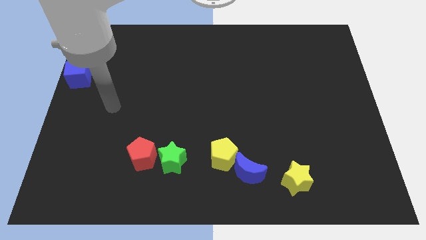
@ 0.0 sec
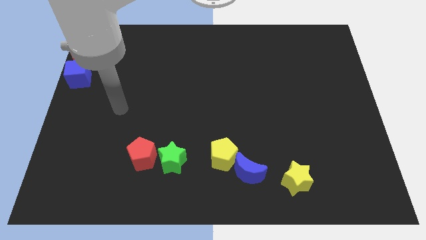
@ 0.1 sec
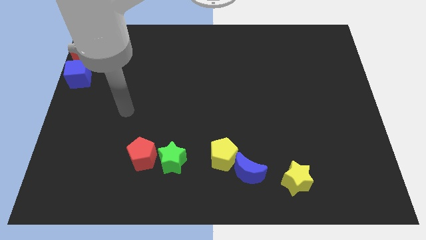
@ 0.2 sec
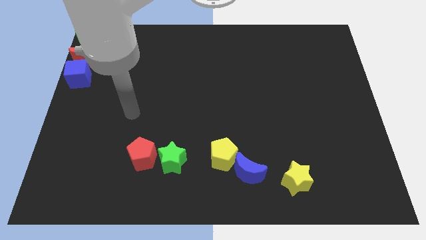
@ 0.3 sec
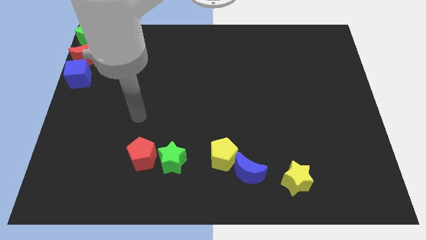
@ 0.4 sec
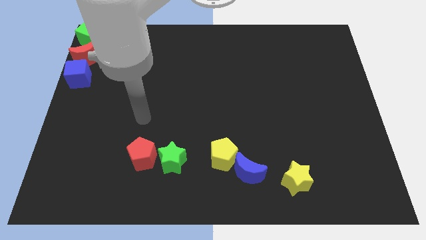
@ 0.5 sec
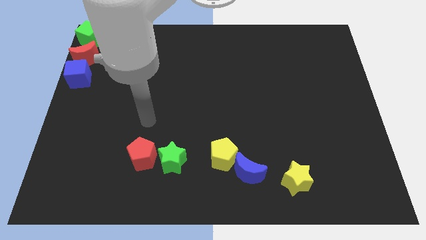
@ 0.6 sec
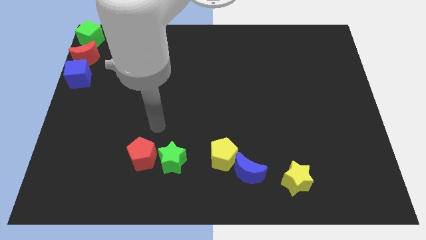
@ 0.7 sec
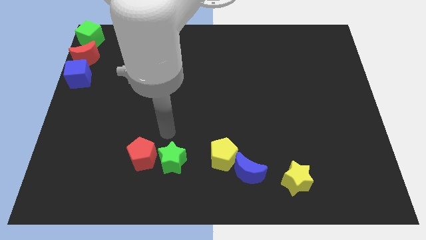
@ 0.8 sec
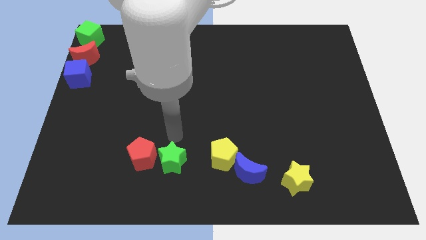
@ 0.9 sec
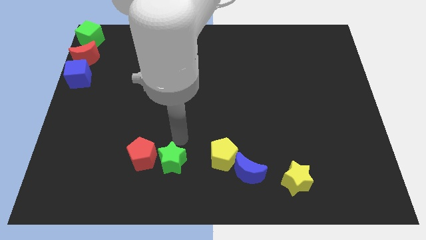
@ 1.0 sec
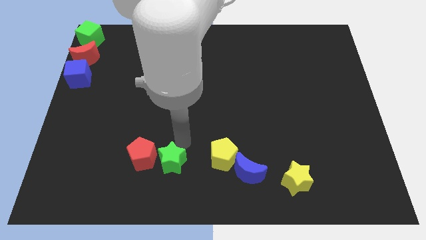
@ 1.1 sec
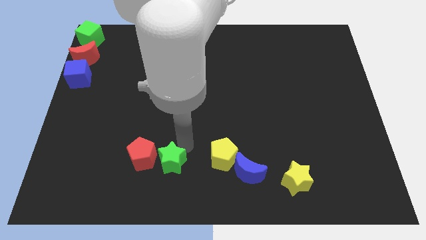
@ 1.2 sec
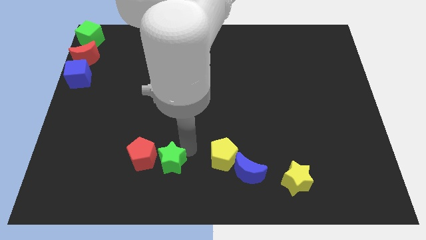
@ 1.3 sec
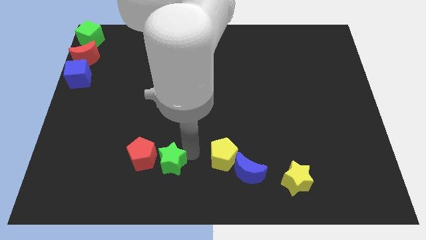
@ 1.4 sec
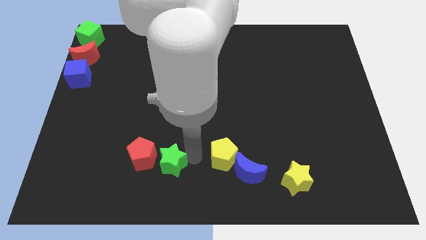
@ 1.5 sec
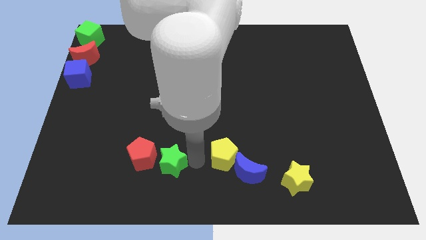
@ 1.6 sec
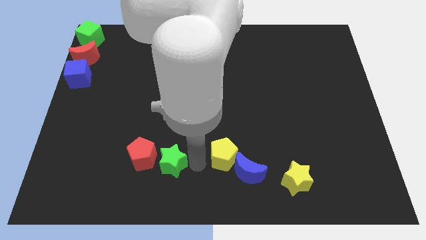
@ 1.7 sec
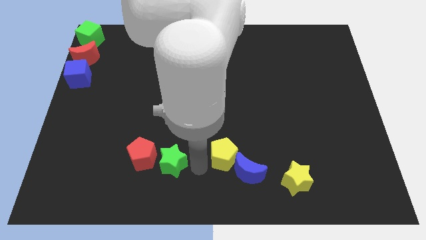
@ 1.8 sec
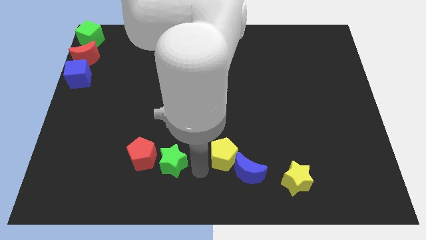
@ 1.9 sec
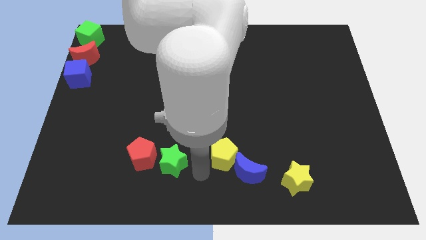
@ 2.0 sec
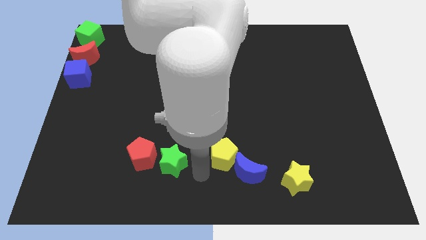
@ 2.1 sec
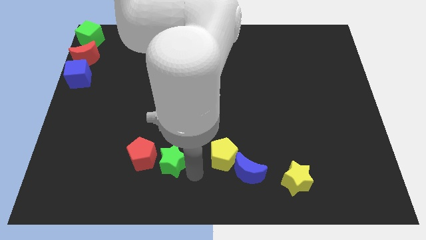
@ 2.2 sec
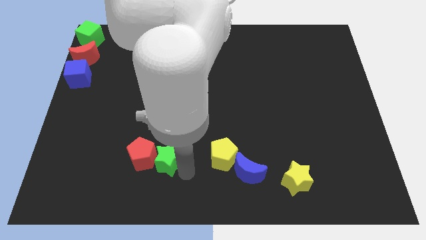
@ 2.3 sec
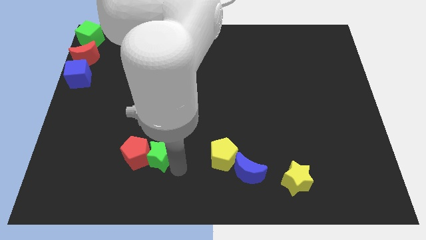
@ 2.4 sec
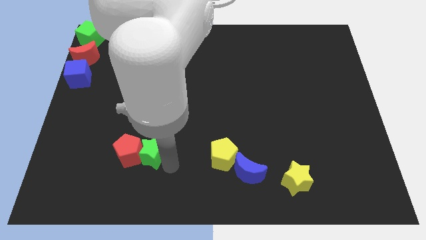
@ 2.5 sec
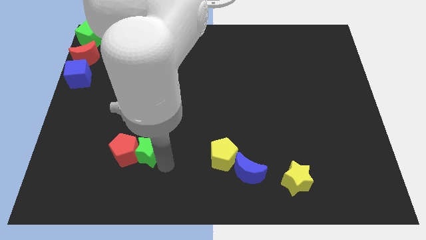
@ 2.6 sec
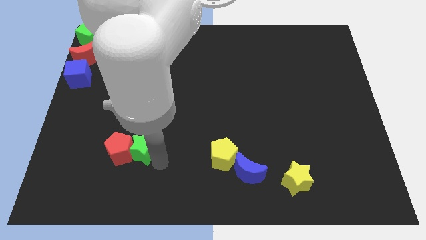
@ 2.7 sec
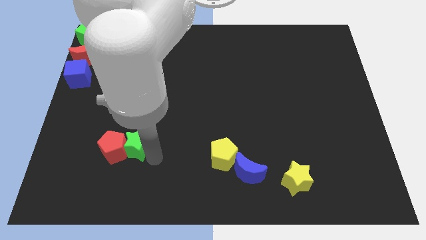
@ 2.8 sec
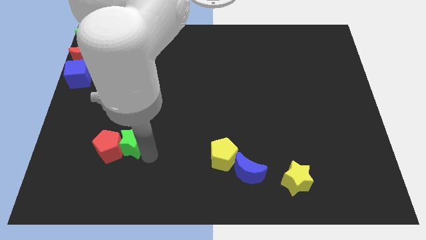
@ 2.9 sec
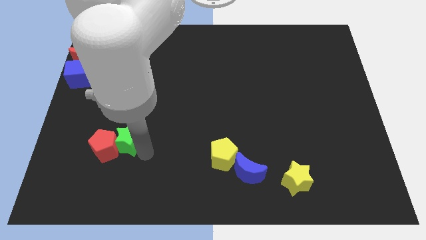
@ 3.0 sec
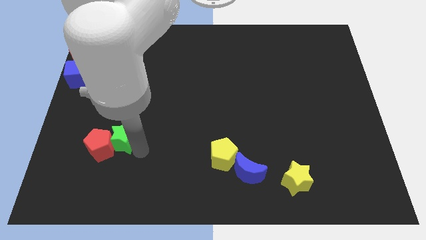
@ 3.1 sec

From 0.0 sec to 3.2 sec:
push the green star and red pentagon towards the left side of the board

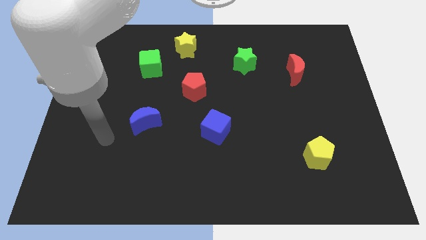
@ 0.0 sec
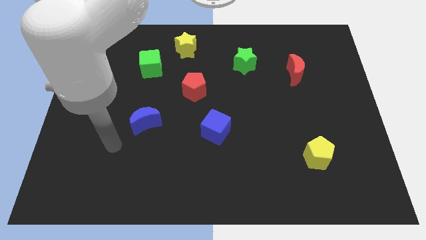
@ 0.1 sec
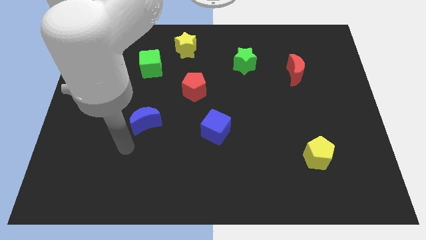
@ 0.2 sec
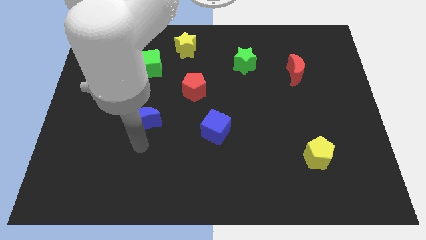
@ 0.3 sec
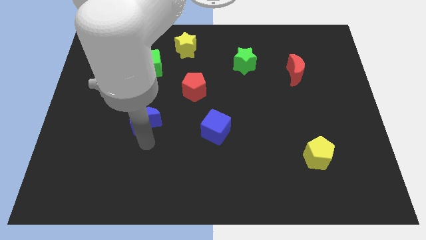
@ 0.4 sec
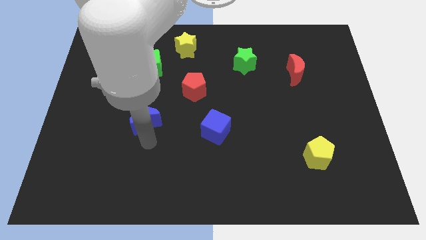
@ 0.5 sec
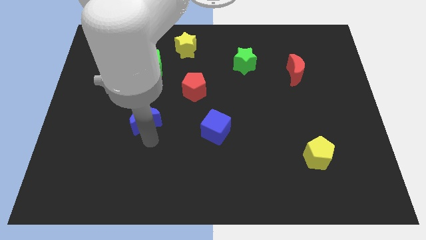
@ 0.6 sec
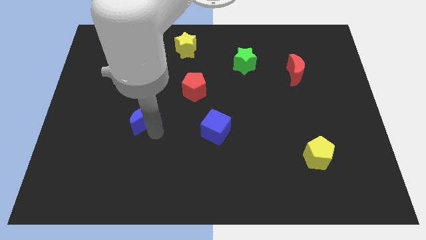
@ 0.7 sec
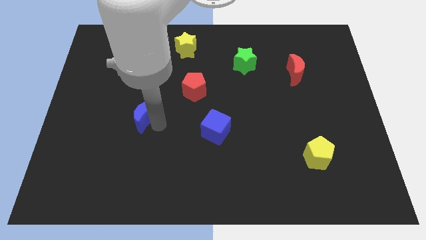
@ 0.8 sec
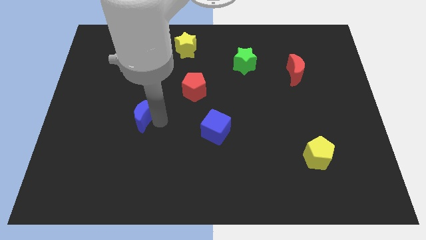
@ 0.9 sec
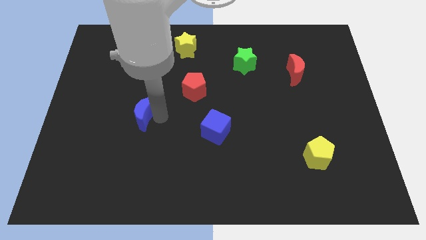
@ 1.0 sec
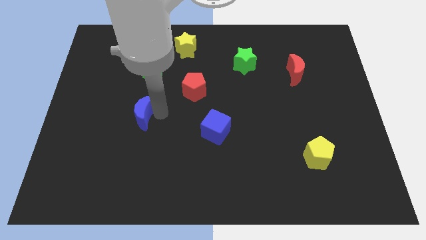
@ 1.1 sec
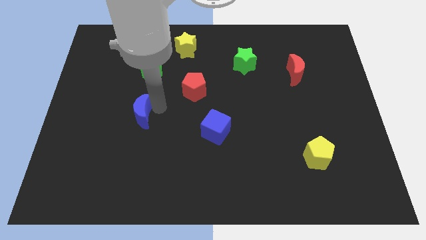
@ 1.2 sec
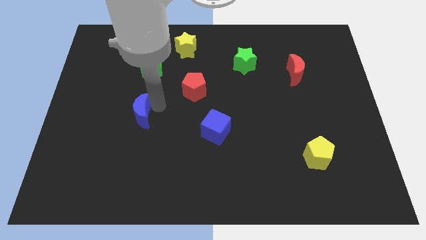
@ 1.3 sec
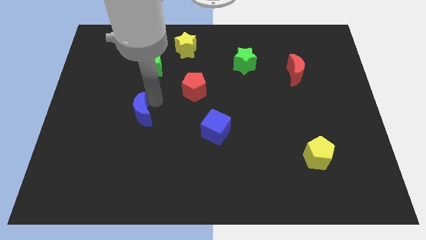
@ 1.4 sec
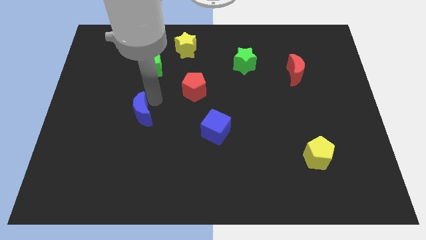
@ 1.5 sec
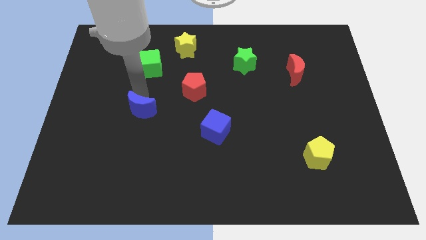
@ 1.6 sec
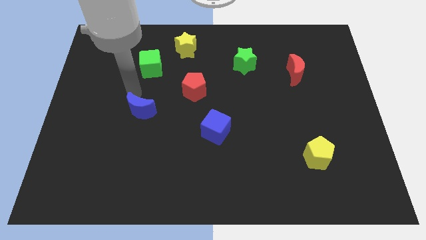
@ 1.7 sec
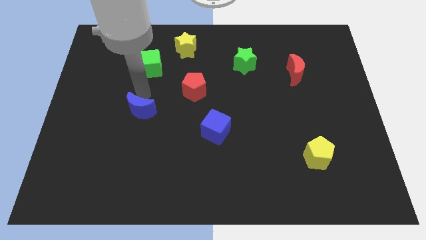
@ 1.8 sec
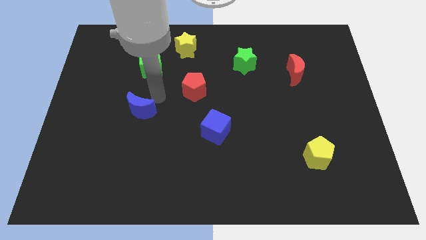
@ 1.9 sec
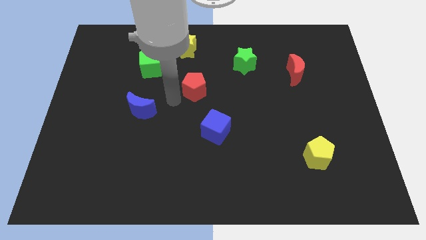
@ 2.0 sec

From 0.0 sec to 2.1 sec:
push blue crescent towards the green block

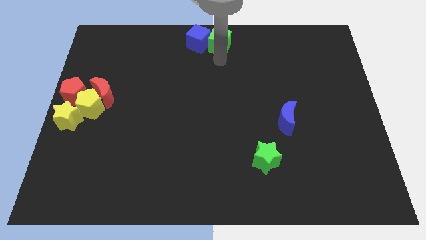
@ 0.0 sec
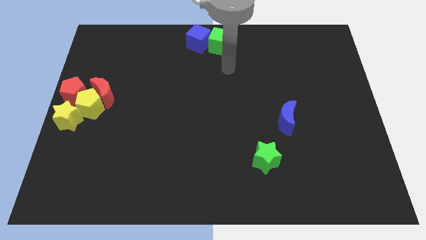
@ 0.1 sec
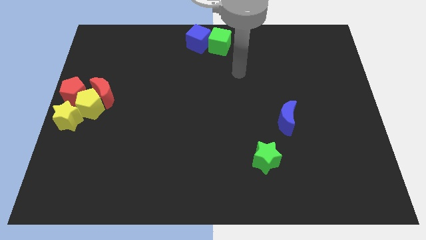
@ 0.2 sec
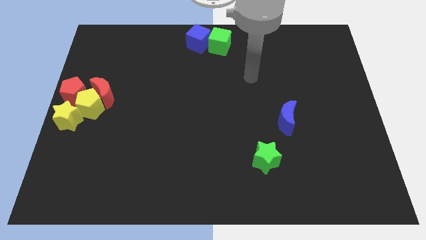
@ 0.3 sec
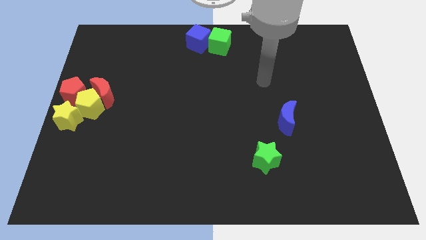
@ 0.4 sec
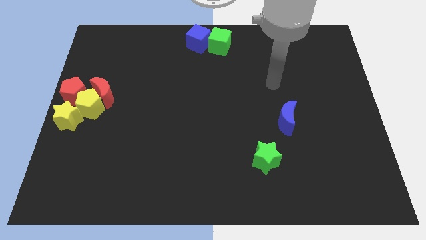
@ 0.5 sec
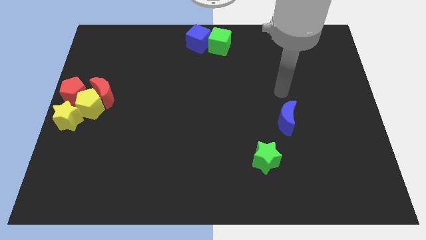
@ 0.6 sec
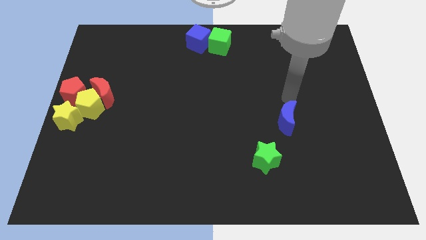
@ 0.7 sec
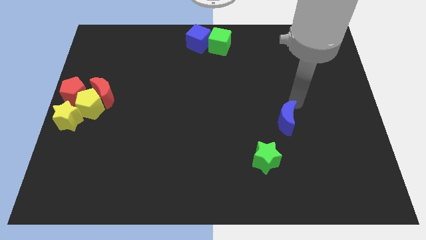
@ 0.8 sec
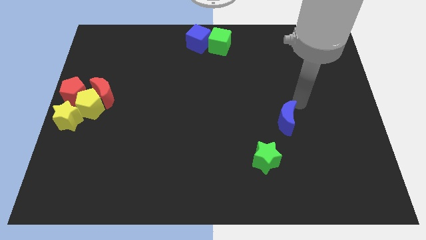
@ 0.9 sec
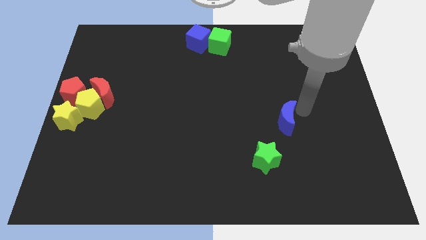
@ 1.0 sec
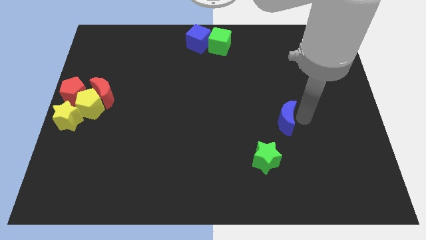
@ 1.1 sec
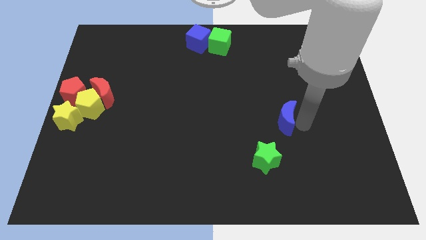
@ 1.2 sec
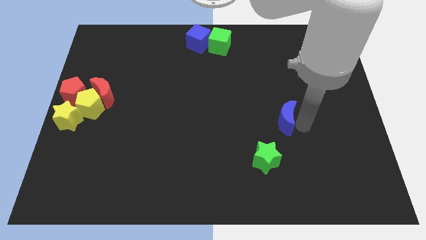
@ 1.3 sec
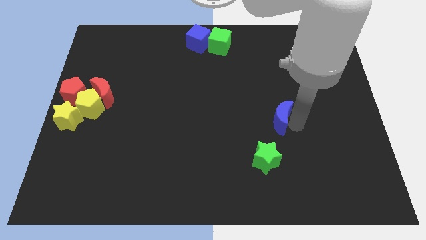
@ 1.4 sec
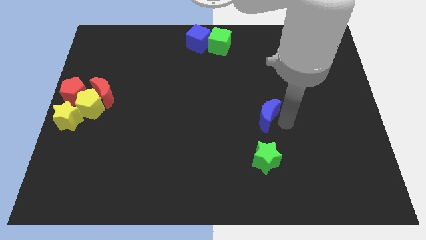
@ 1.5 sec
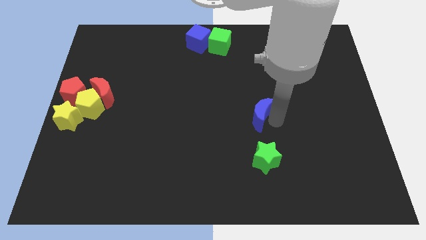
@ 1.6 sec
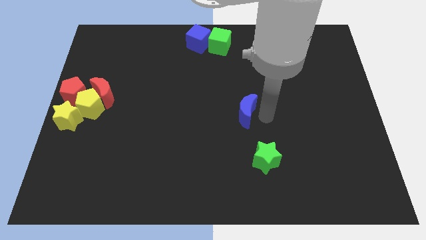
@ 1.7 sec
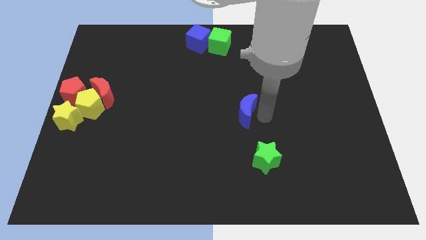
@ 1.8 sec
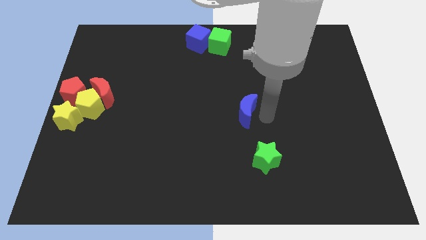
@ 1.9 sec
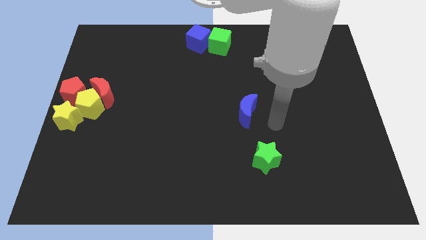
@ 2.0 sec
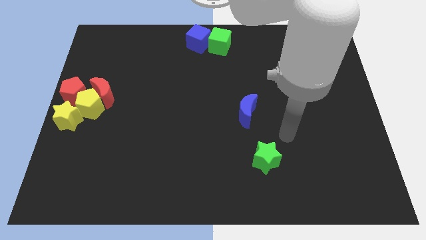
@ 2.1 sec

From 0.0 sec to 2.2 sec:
move the blue crescent to the top of the green star

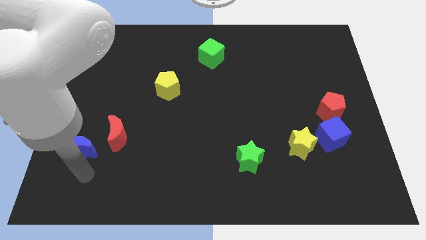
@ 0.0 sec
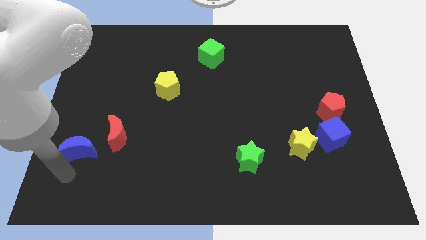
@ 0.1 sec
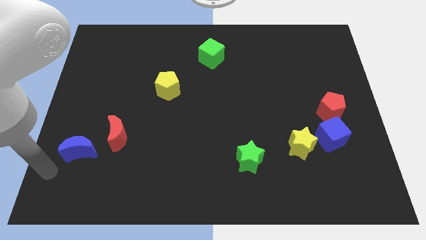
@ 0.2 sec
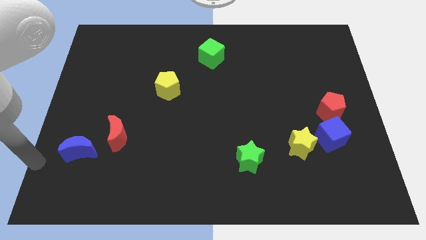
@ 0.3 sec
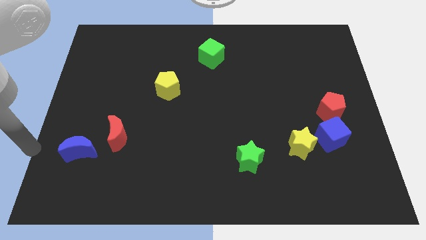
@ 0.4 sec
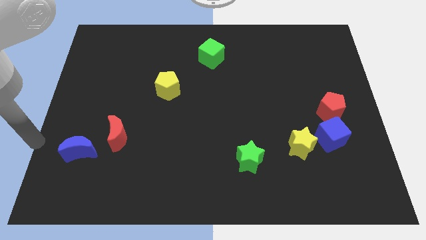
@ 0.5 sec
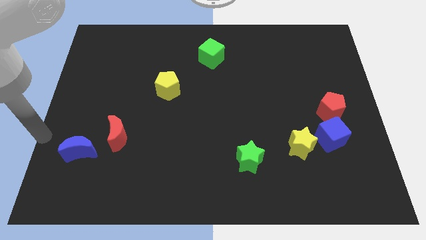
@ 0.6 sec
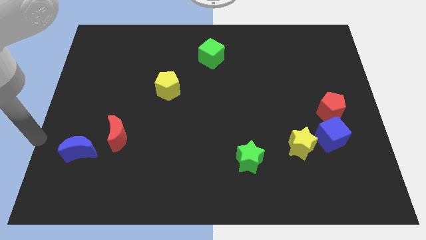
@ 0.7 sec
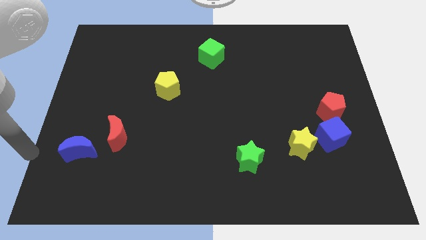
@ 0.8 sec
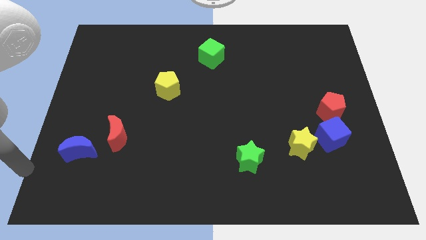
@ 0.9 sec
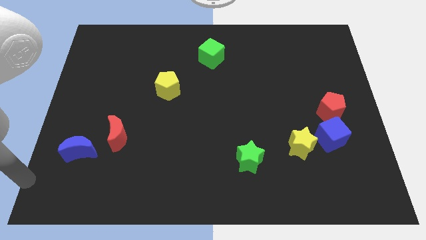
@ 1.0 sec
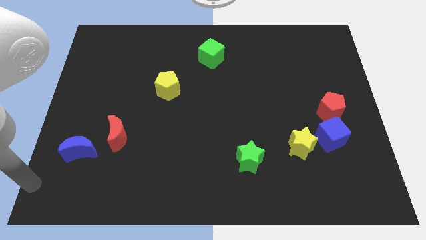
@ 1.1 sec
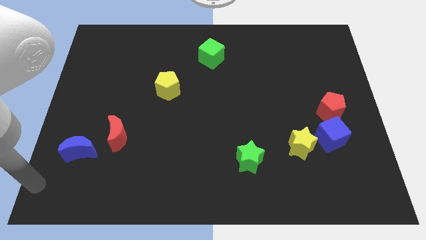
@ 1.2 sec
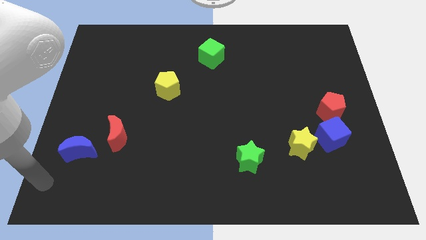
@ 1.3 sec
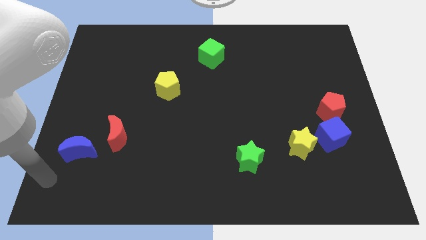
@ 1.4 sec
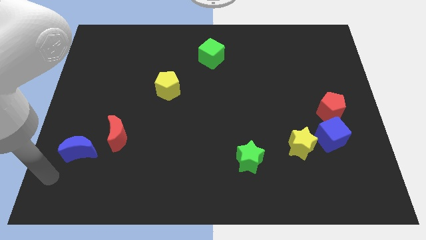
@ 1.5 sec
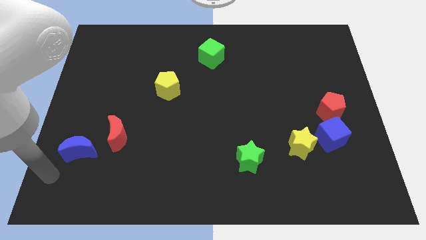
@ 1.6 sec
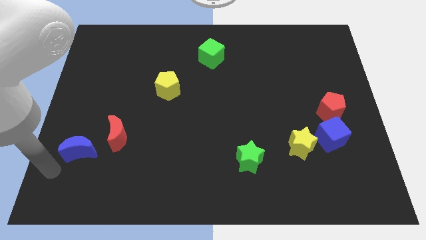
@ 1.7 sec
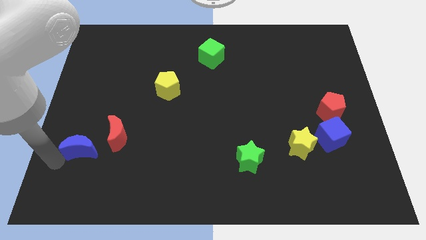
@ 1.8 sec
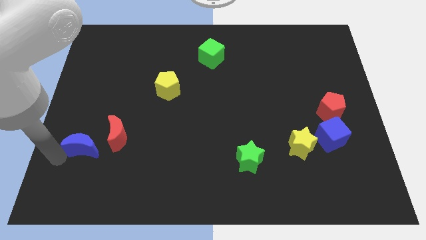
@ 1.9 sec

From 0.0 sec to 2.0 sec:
tap the left side of the blue crescent
